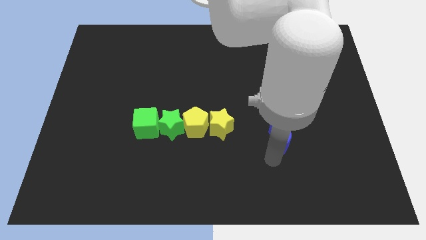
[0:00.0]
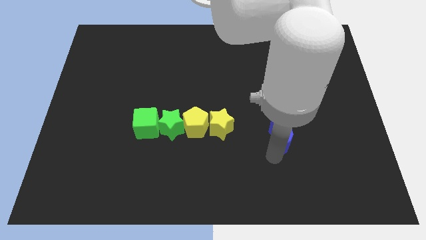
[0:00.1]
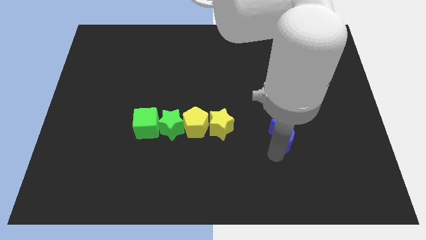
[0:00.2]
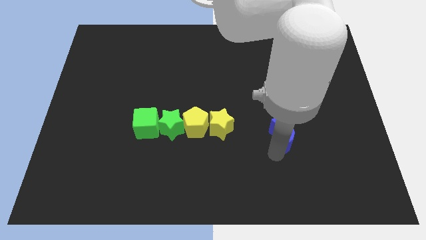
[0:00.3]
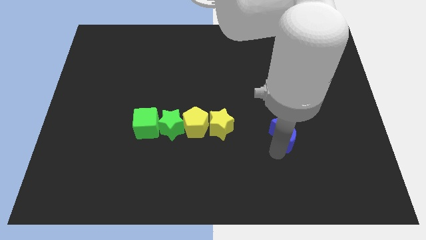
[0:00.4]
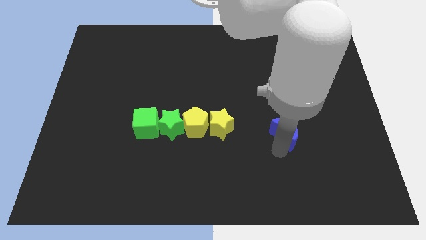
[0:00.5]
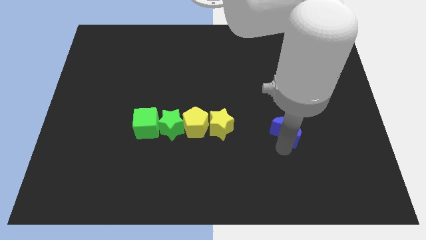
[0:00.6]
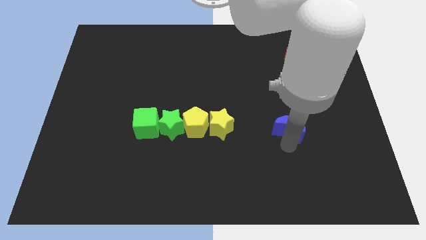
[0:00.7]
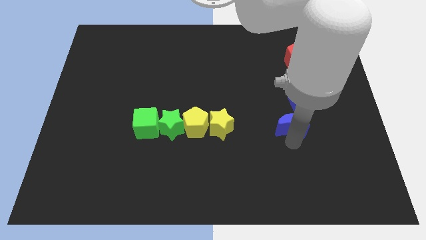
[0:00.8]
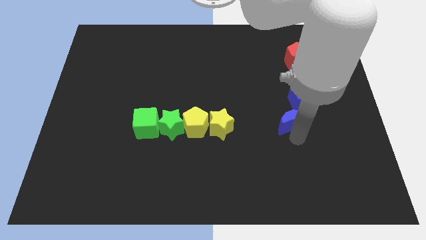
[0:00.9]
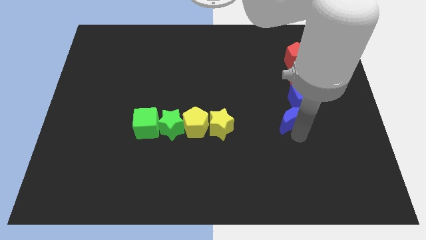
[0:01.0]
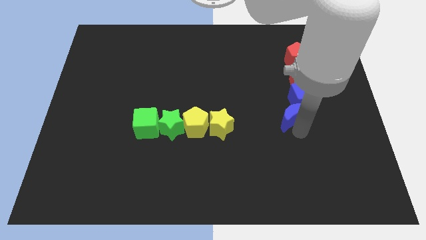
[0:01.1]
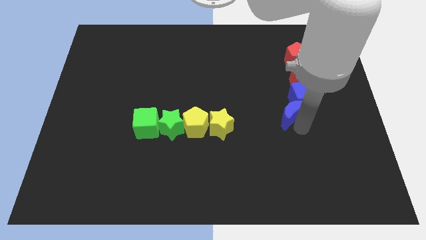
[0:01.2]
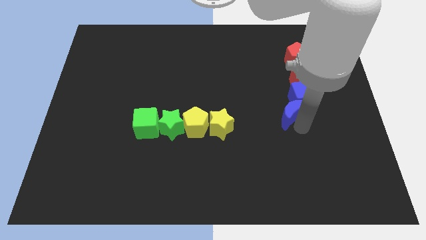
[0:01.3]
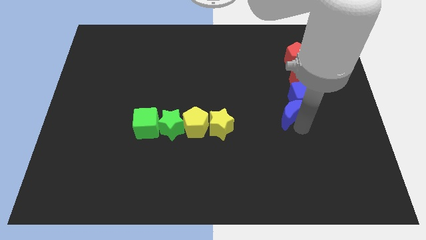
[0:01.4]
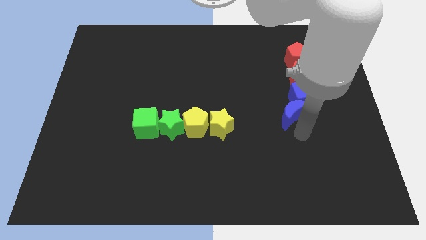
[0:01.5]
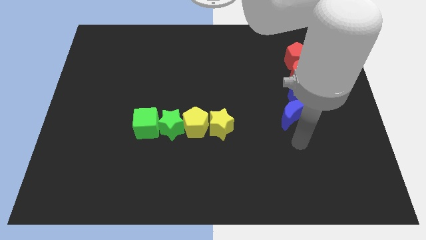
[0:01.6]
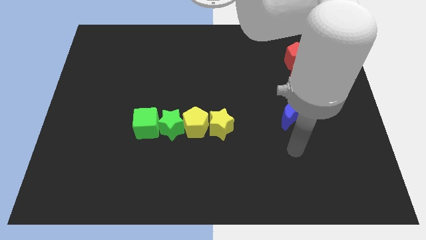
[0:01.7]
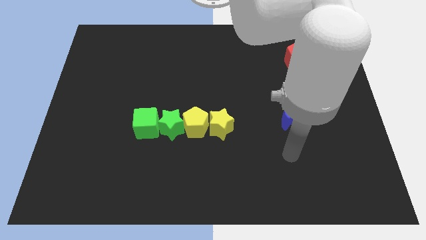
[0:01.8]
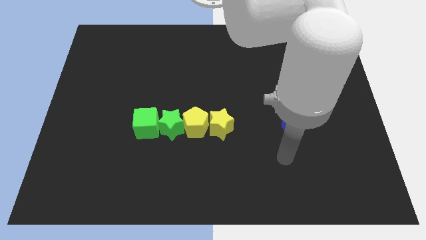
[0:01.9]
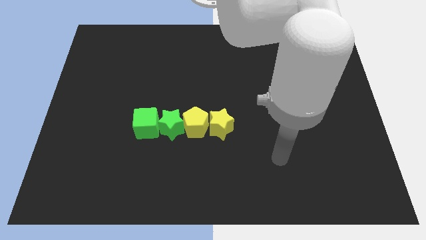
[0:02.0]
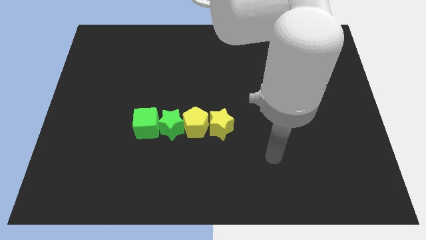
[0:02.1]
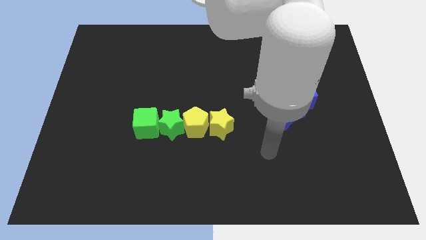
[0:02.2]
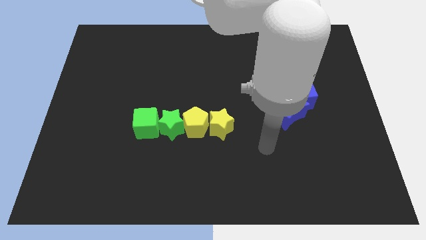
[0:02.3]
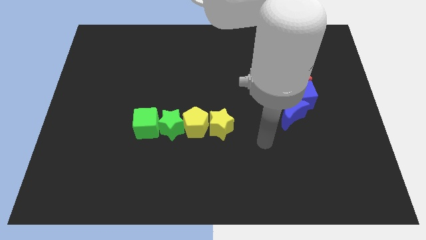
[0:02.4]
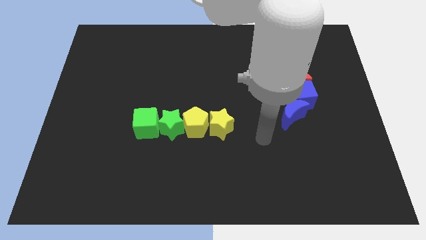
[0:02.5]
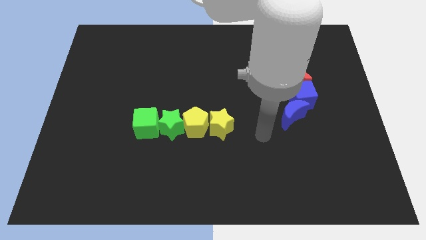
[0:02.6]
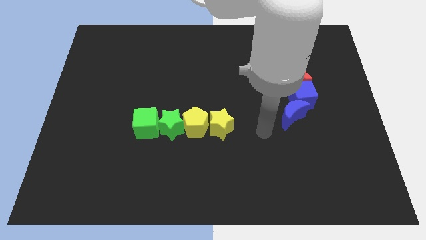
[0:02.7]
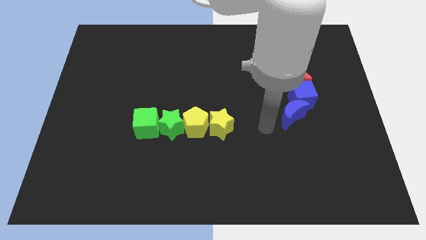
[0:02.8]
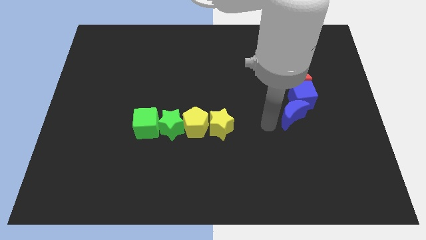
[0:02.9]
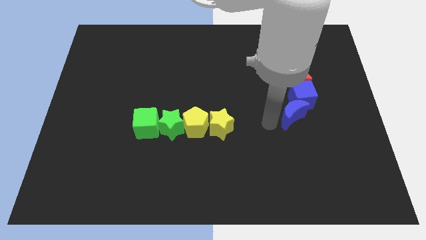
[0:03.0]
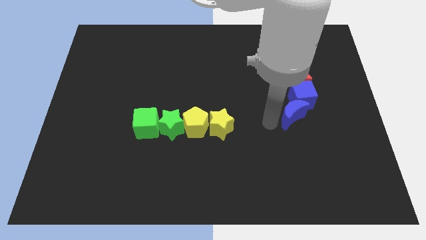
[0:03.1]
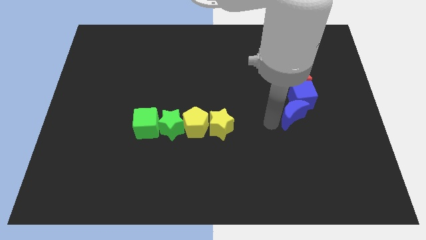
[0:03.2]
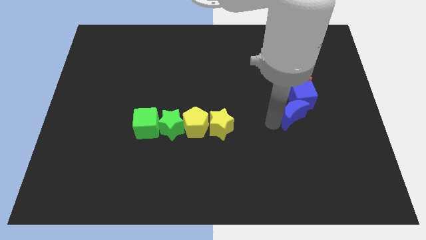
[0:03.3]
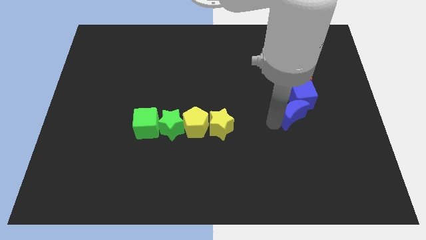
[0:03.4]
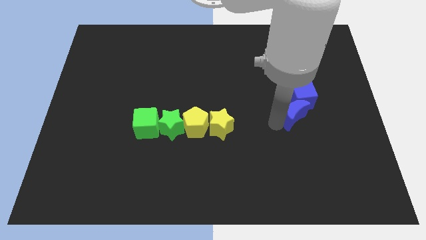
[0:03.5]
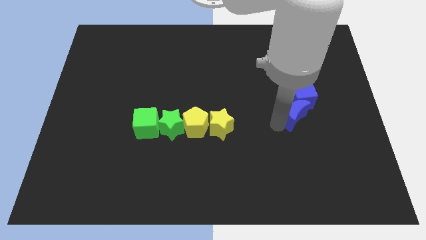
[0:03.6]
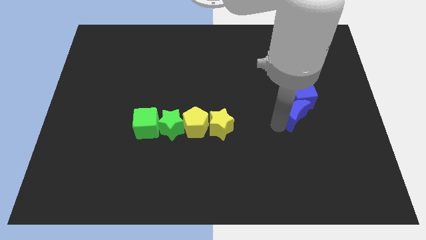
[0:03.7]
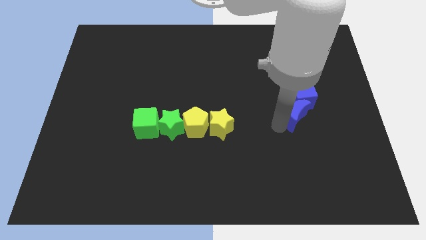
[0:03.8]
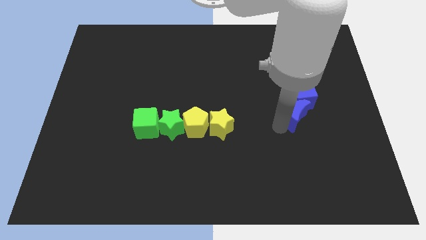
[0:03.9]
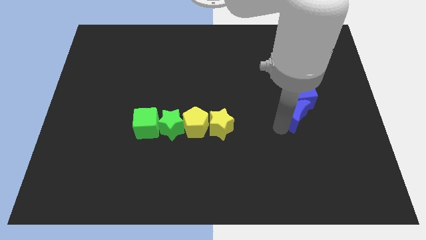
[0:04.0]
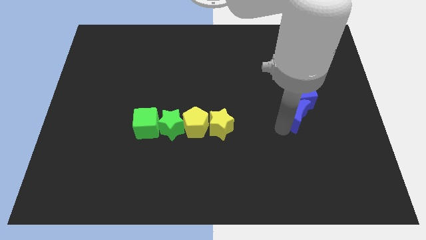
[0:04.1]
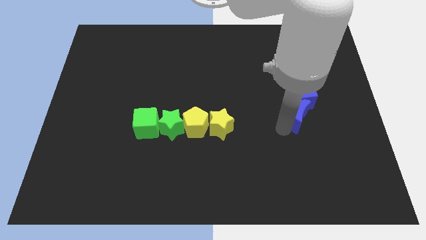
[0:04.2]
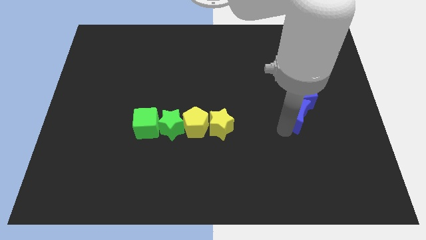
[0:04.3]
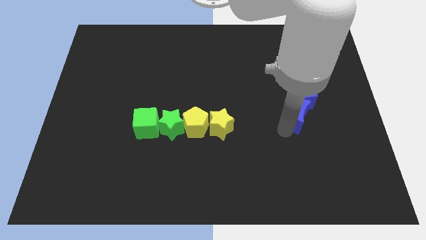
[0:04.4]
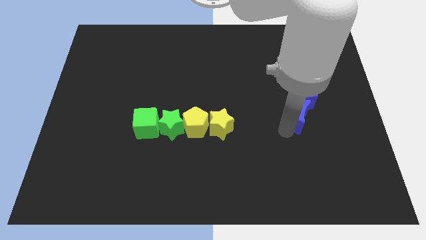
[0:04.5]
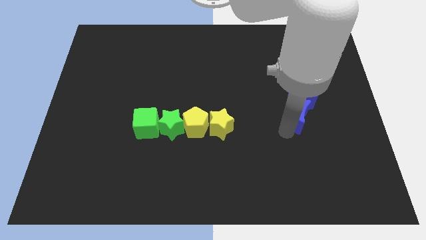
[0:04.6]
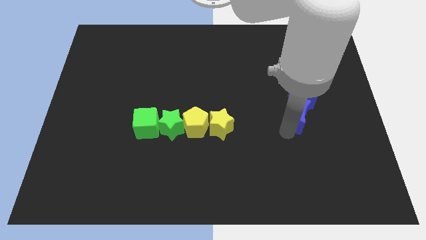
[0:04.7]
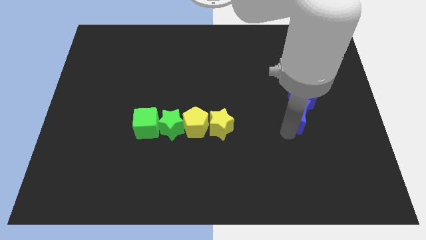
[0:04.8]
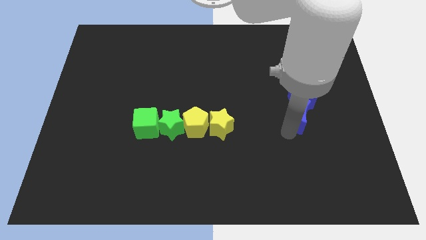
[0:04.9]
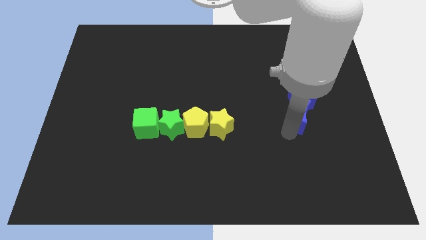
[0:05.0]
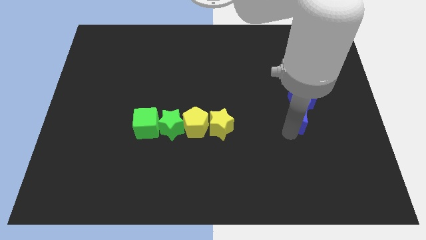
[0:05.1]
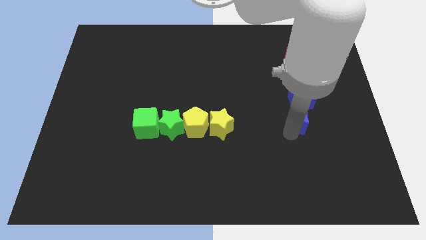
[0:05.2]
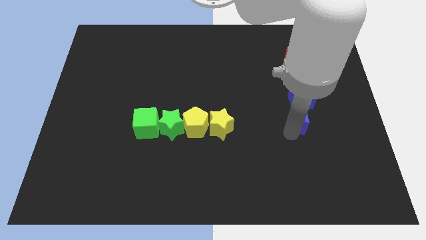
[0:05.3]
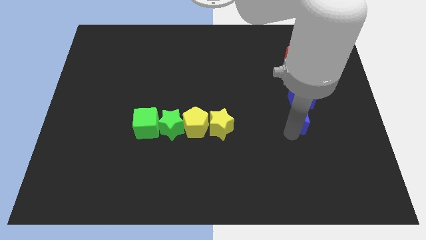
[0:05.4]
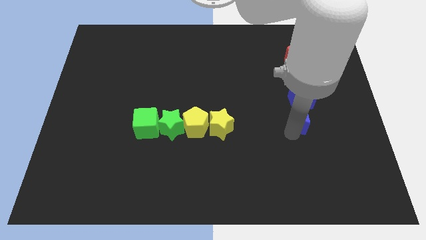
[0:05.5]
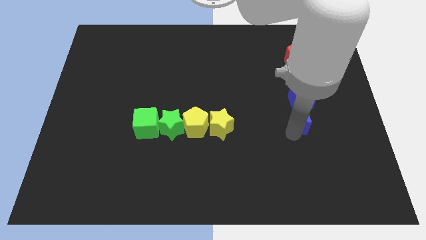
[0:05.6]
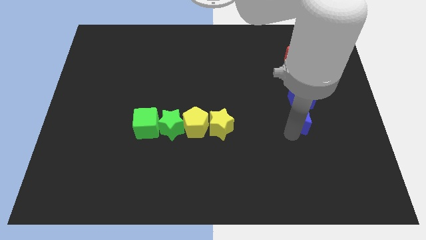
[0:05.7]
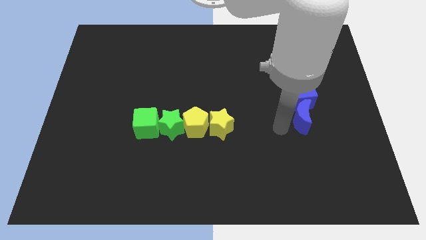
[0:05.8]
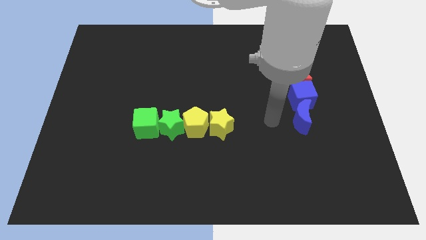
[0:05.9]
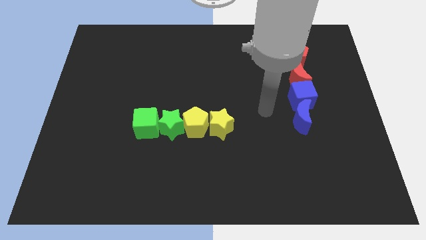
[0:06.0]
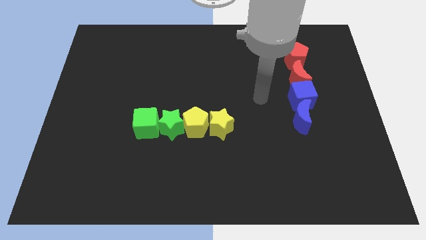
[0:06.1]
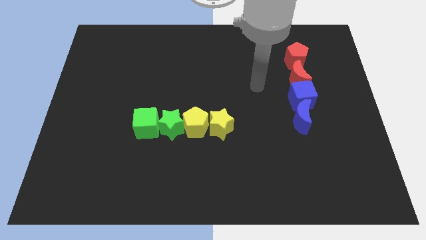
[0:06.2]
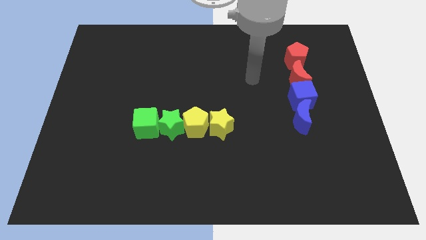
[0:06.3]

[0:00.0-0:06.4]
place the blue moon vertically below the blue cube

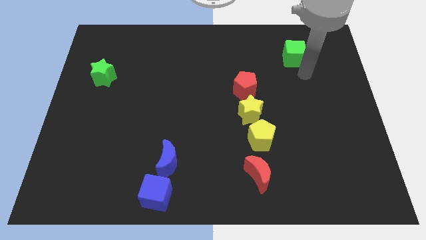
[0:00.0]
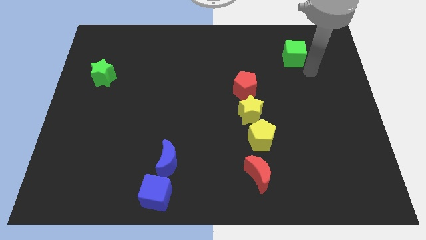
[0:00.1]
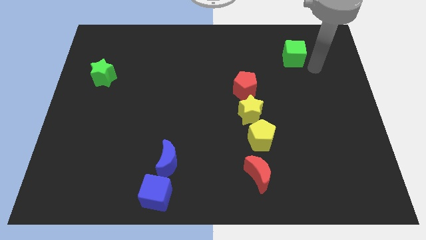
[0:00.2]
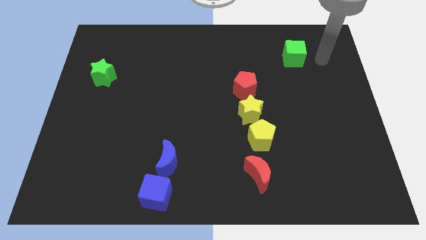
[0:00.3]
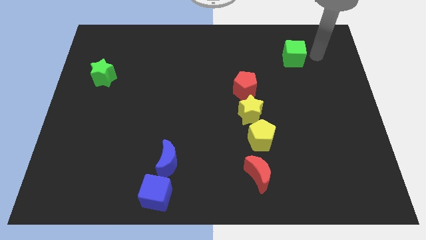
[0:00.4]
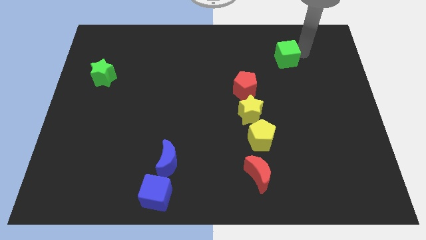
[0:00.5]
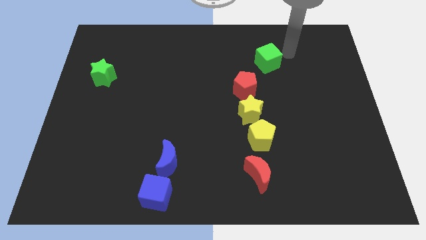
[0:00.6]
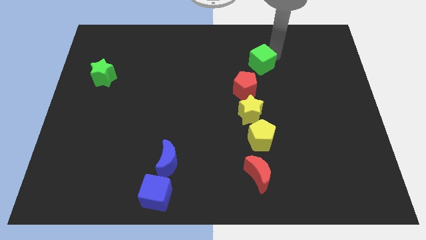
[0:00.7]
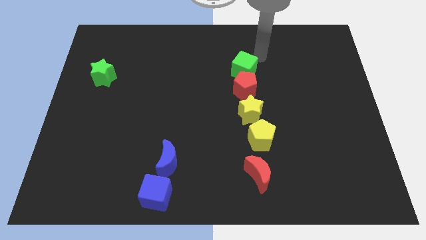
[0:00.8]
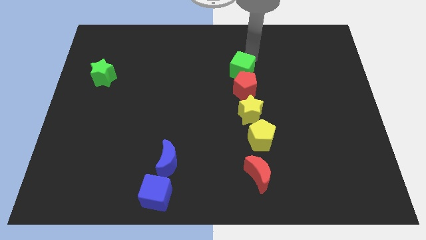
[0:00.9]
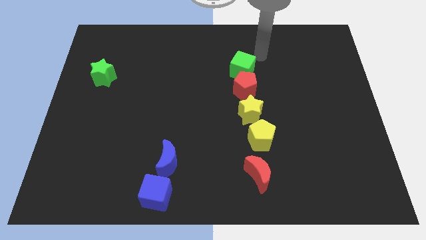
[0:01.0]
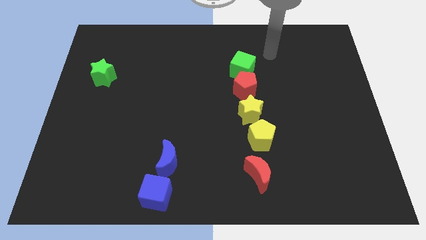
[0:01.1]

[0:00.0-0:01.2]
push the green cube to the top of the red pentagon

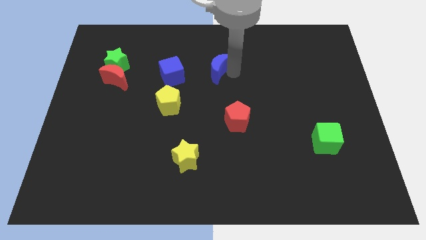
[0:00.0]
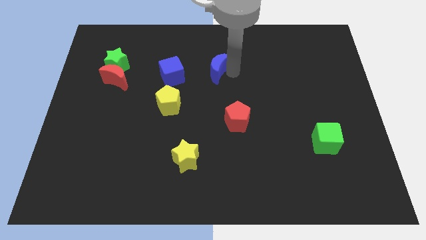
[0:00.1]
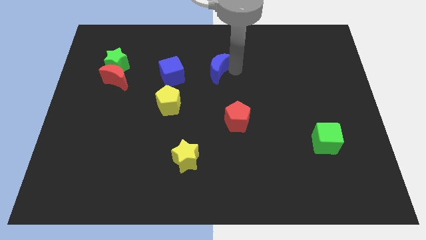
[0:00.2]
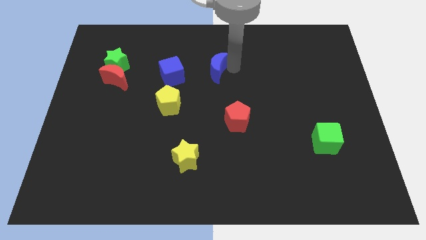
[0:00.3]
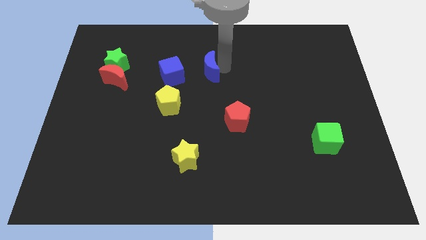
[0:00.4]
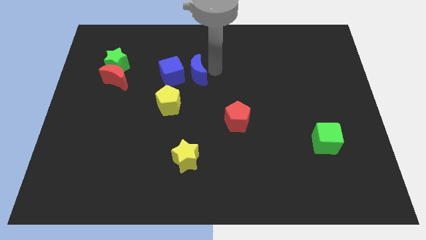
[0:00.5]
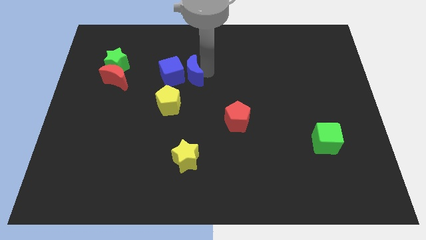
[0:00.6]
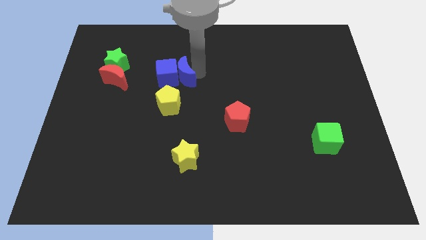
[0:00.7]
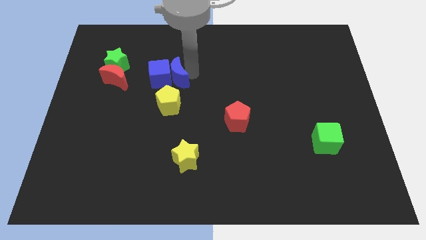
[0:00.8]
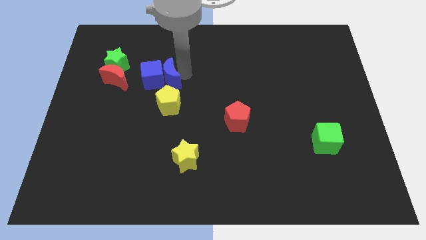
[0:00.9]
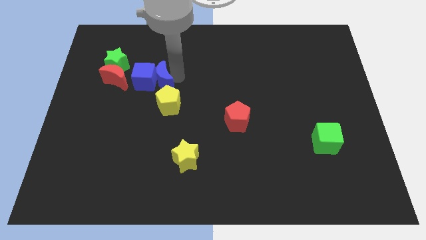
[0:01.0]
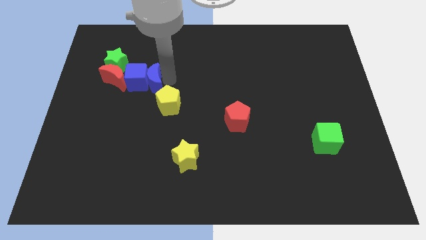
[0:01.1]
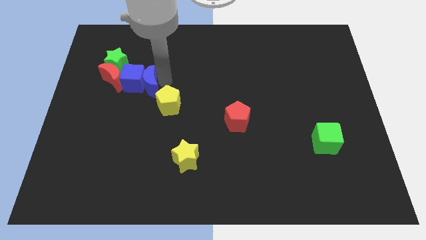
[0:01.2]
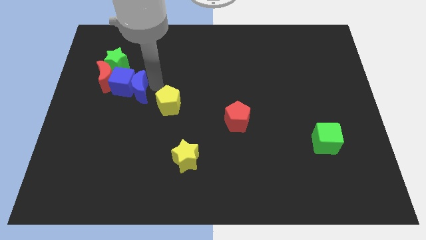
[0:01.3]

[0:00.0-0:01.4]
move the blue blocks into the red moon

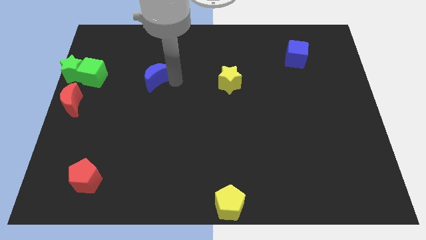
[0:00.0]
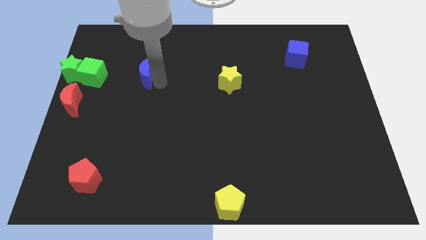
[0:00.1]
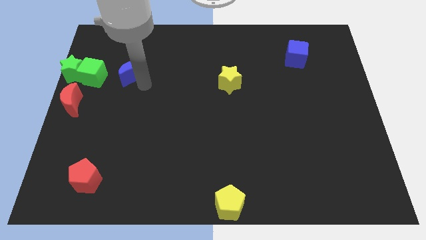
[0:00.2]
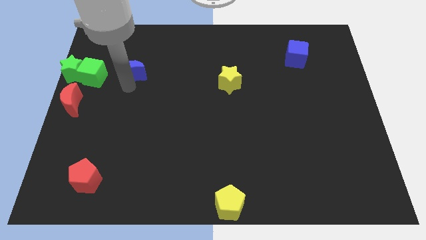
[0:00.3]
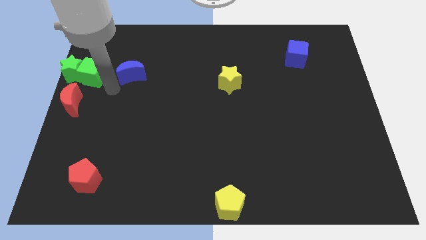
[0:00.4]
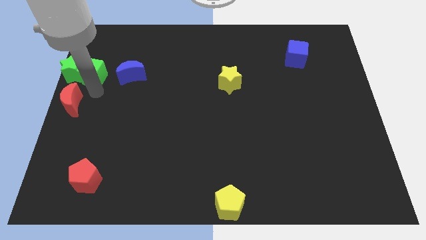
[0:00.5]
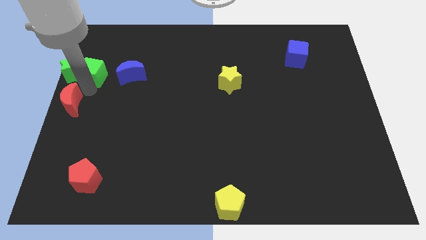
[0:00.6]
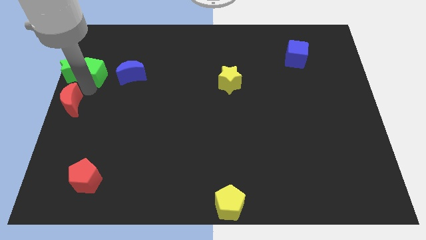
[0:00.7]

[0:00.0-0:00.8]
slightly push the blue moon right to the green cube
